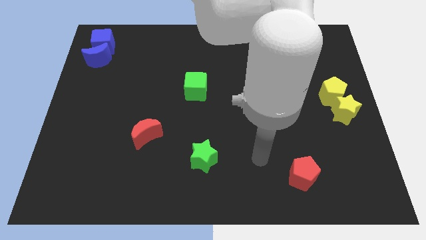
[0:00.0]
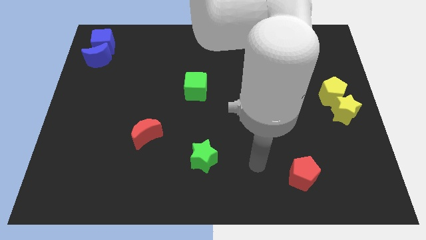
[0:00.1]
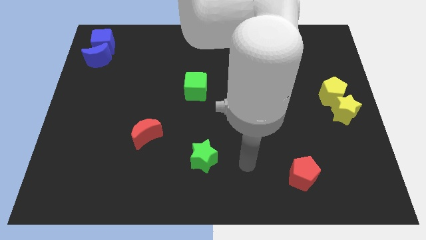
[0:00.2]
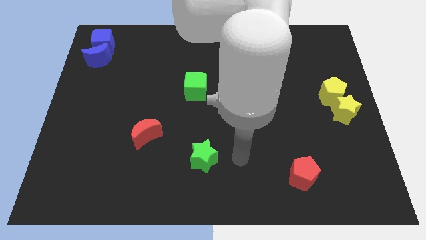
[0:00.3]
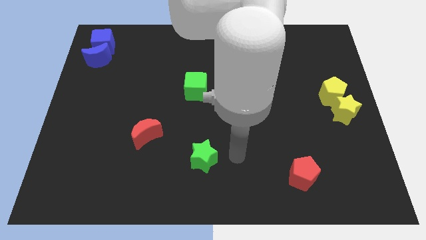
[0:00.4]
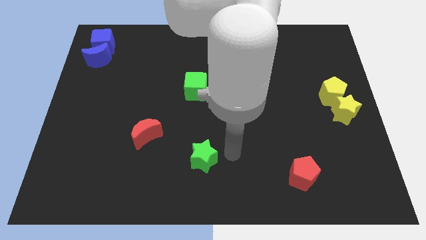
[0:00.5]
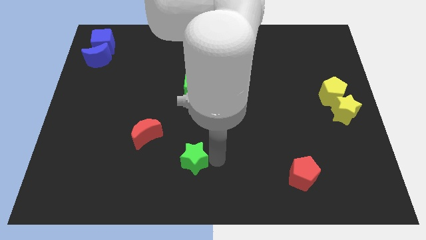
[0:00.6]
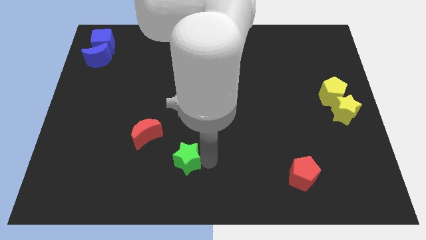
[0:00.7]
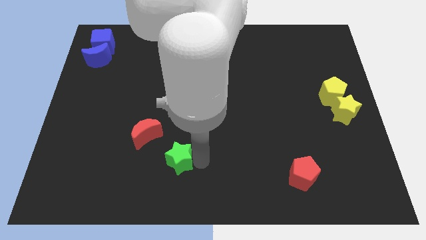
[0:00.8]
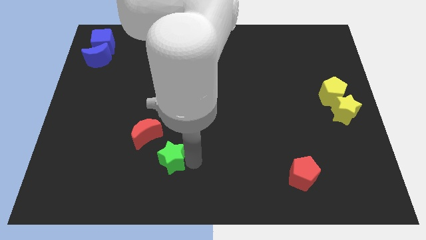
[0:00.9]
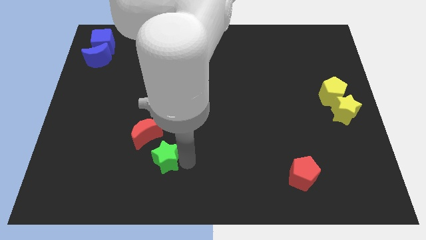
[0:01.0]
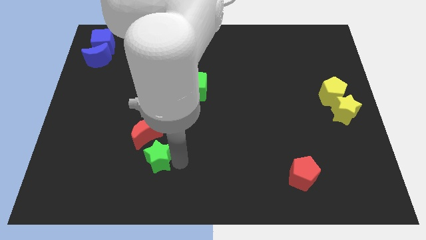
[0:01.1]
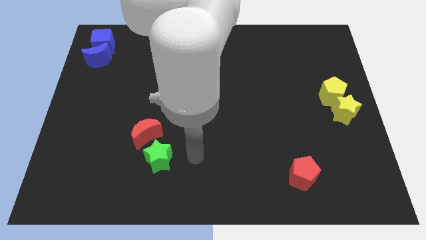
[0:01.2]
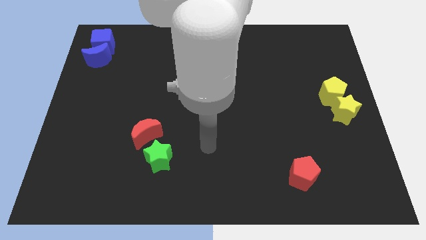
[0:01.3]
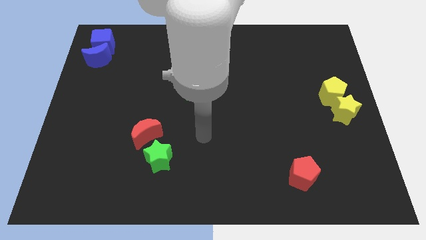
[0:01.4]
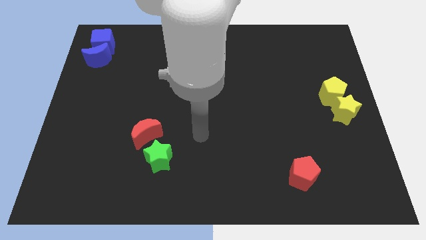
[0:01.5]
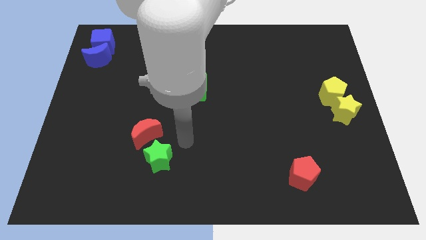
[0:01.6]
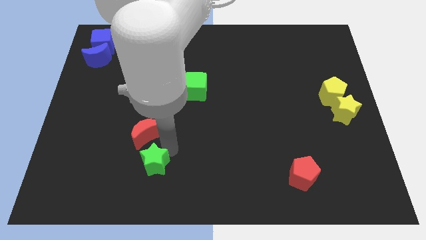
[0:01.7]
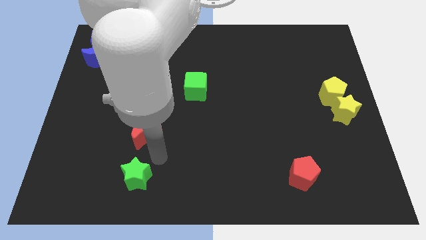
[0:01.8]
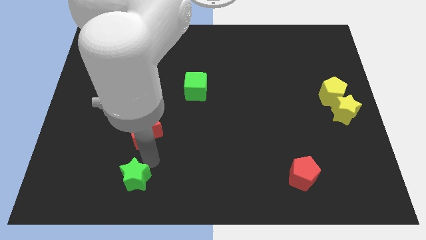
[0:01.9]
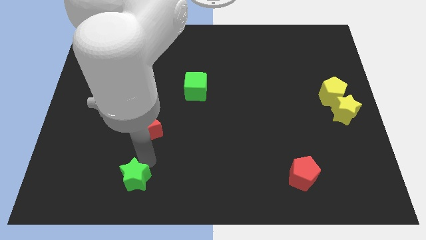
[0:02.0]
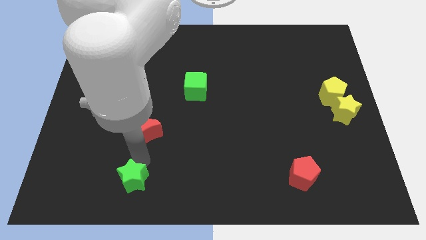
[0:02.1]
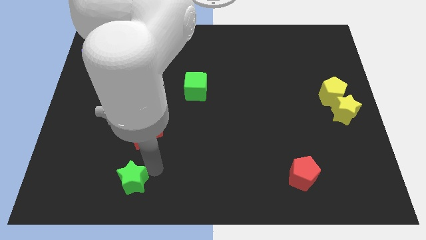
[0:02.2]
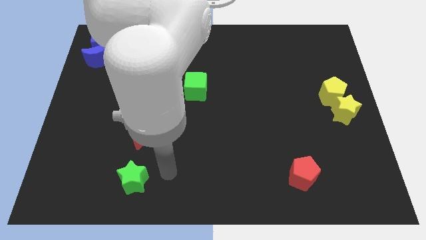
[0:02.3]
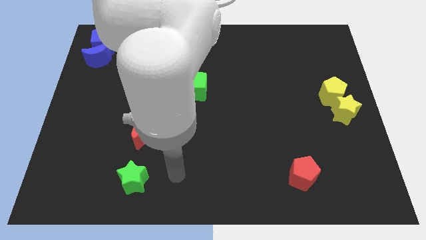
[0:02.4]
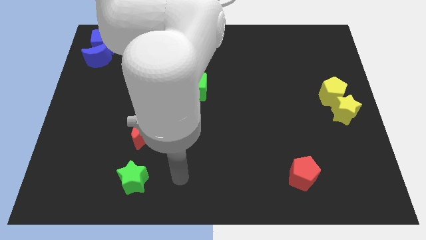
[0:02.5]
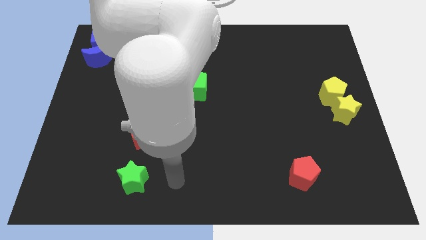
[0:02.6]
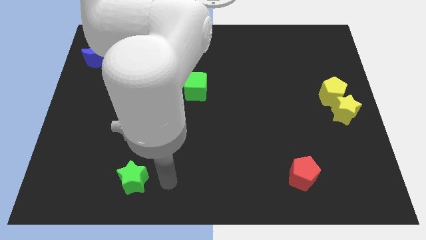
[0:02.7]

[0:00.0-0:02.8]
move the green star to the bottom of the red crescent

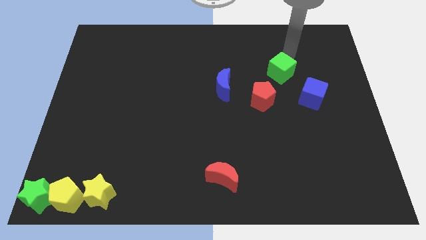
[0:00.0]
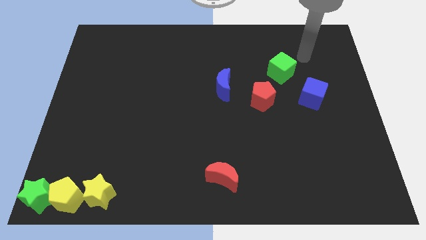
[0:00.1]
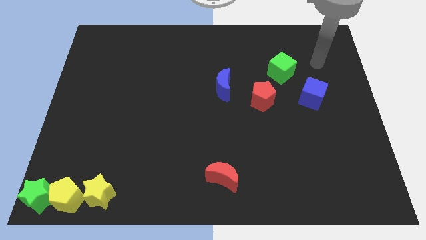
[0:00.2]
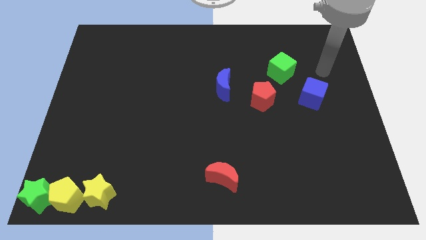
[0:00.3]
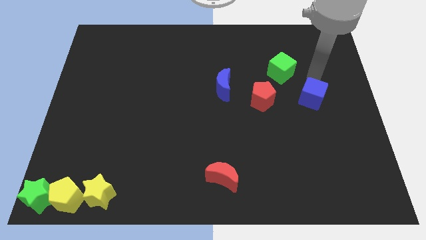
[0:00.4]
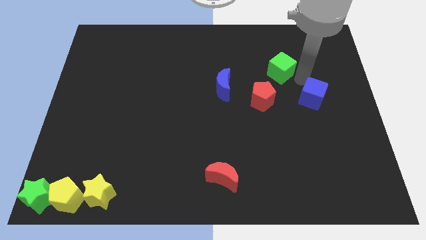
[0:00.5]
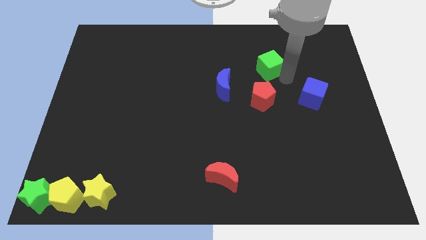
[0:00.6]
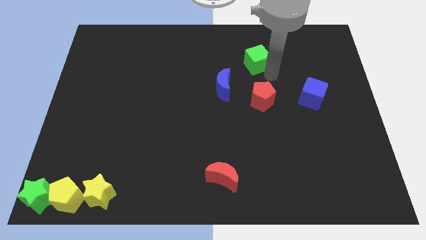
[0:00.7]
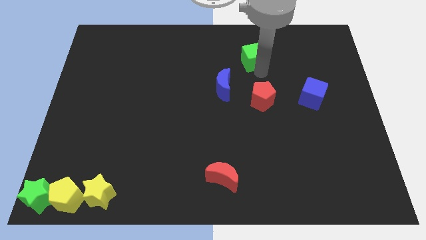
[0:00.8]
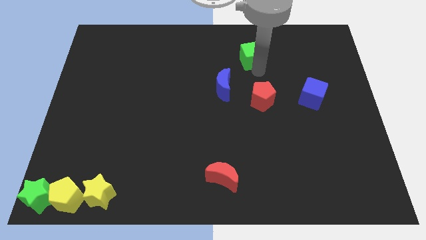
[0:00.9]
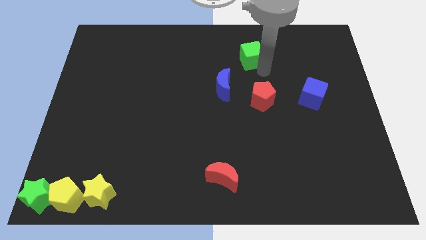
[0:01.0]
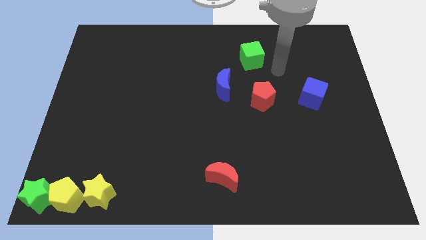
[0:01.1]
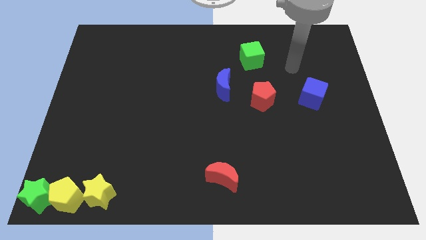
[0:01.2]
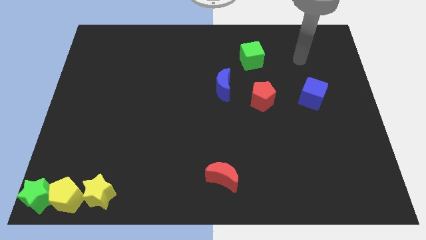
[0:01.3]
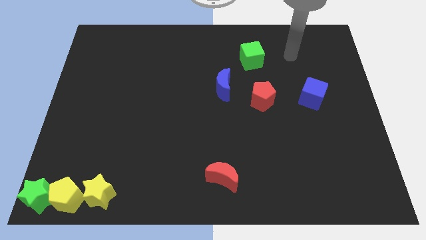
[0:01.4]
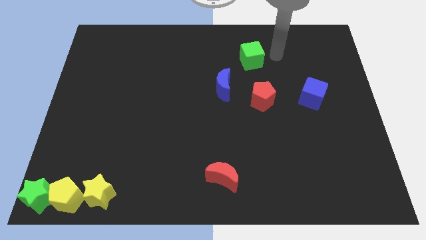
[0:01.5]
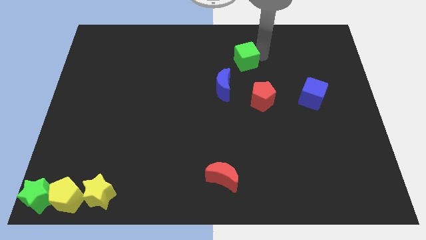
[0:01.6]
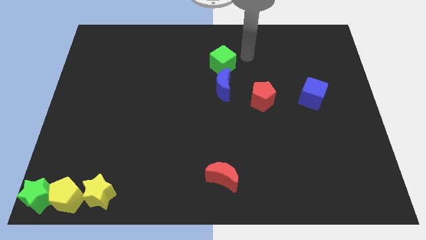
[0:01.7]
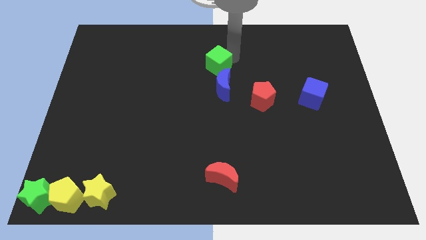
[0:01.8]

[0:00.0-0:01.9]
move the green cube closer to the blue crescent

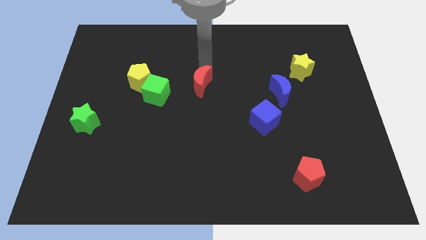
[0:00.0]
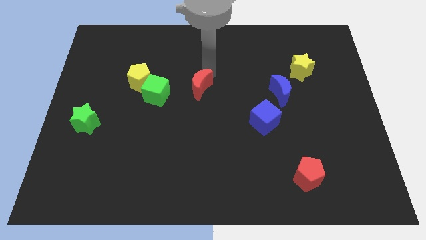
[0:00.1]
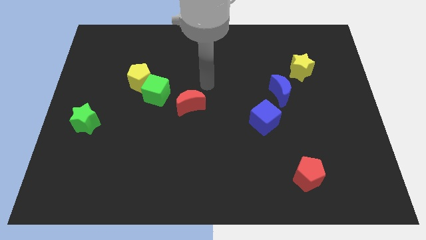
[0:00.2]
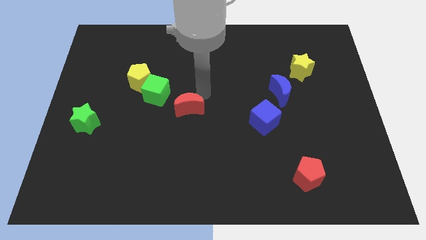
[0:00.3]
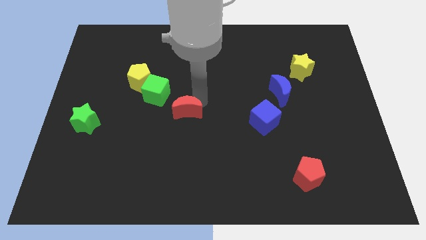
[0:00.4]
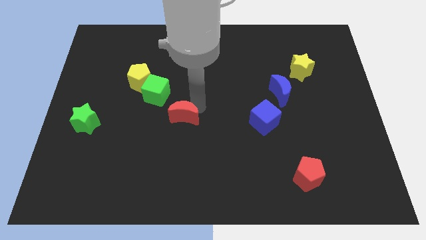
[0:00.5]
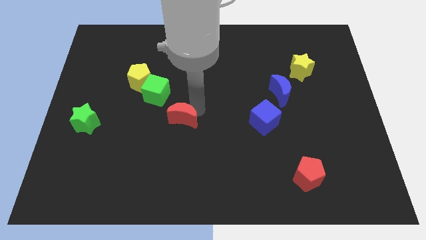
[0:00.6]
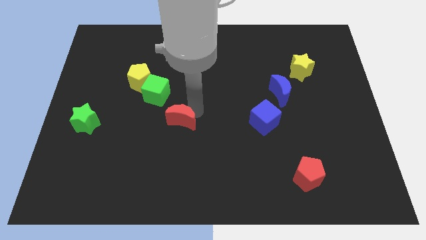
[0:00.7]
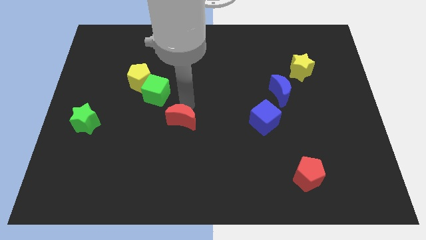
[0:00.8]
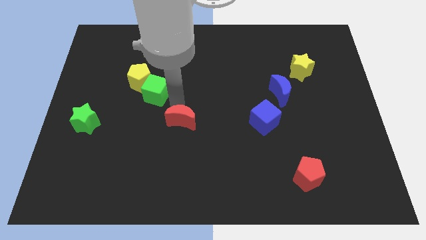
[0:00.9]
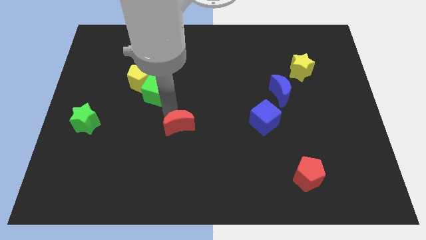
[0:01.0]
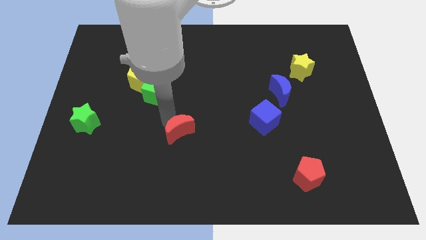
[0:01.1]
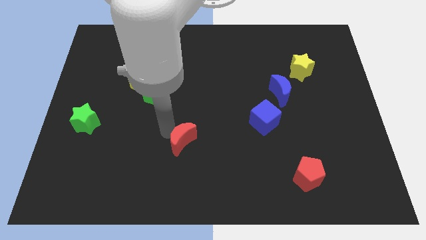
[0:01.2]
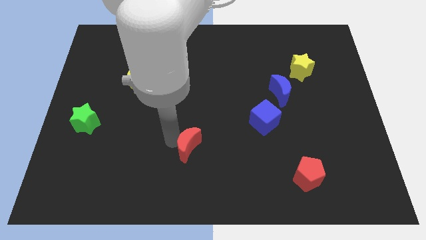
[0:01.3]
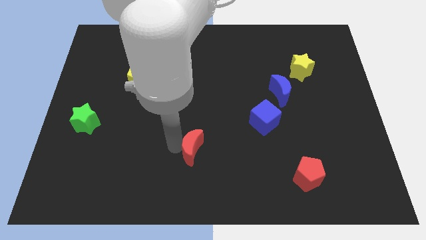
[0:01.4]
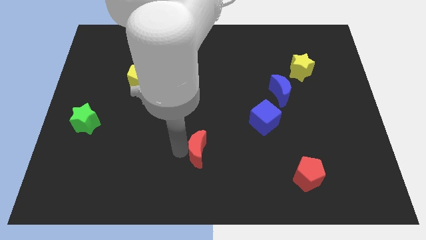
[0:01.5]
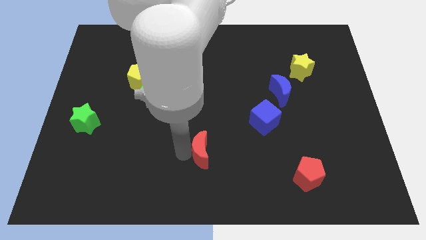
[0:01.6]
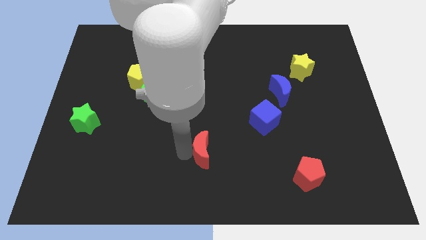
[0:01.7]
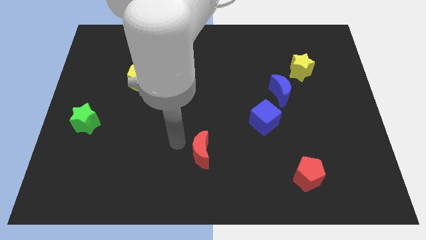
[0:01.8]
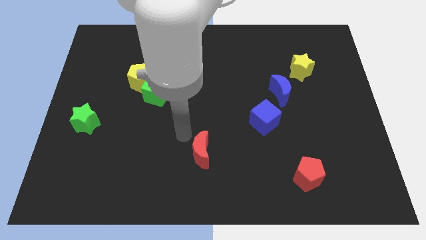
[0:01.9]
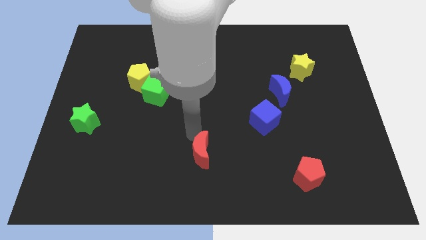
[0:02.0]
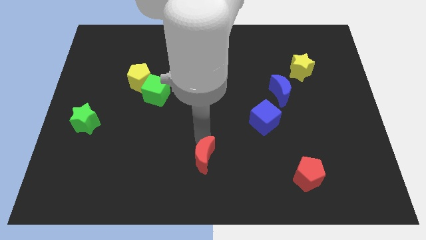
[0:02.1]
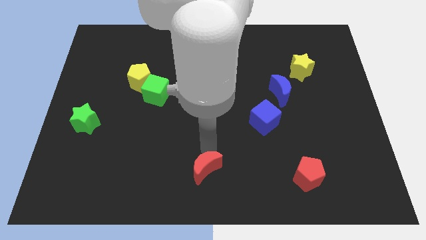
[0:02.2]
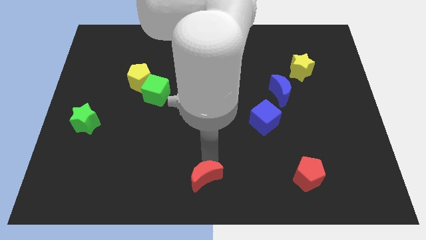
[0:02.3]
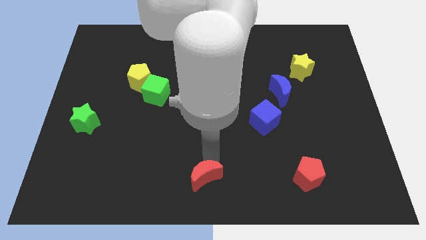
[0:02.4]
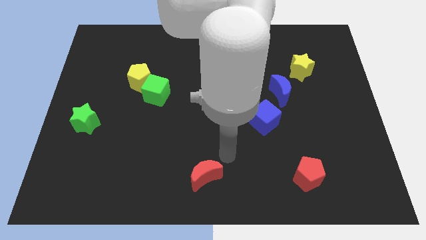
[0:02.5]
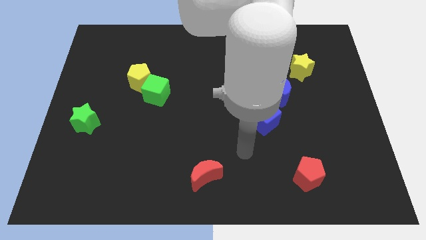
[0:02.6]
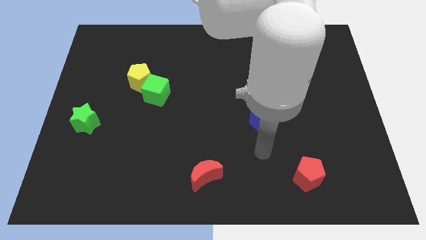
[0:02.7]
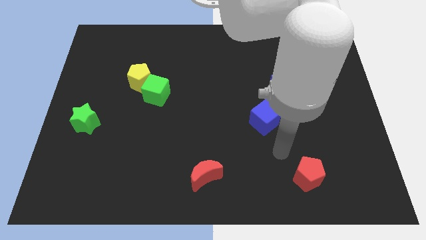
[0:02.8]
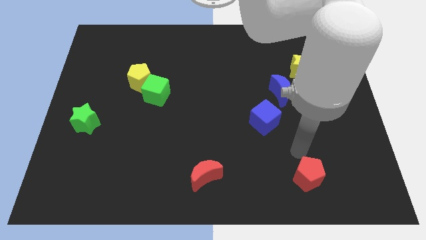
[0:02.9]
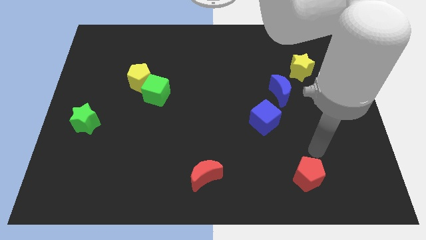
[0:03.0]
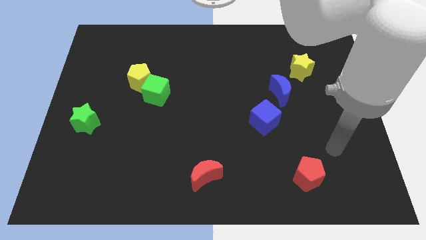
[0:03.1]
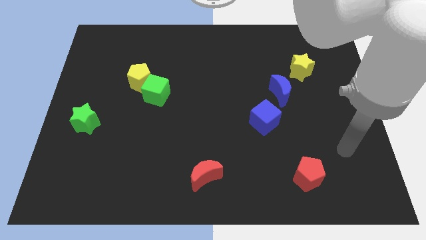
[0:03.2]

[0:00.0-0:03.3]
place the red moon parallel left to red pentagon

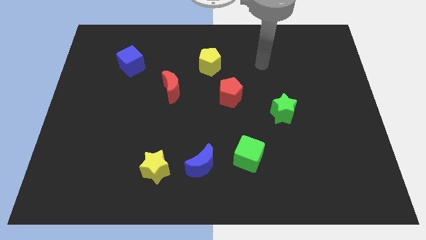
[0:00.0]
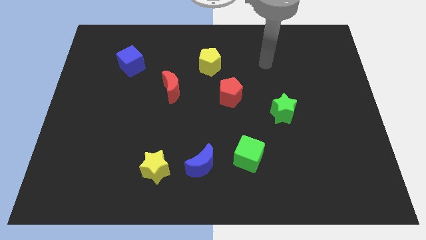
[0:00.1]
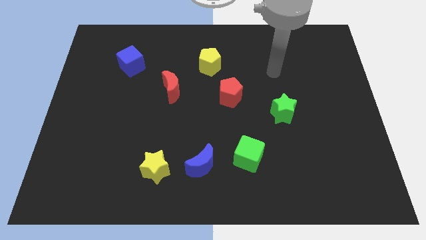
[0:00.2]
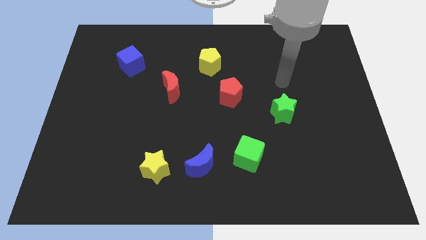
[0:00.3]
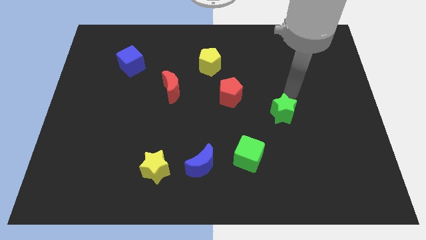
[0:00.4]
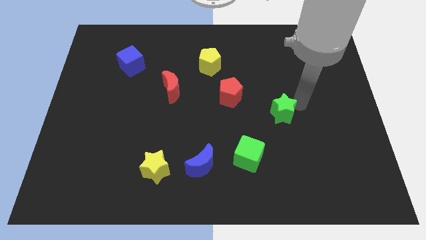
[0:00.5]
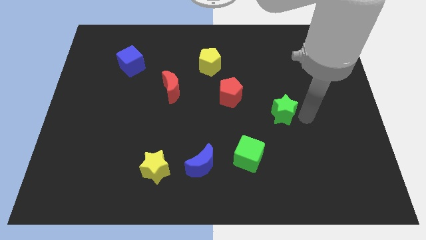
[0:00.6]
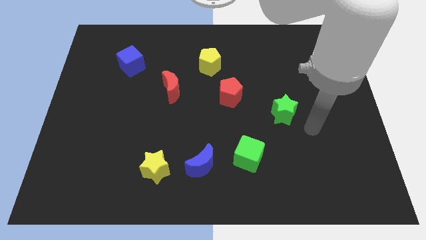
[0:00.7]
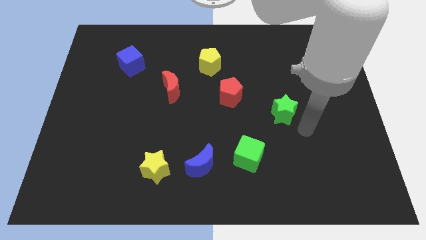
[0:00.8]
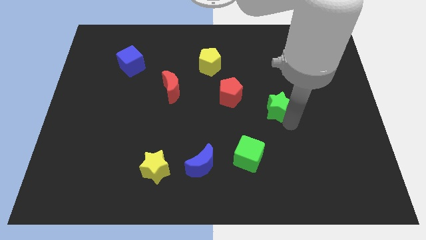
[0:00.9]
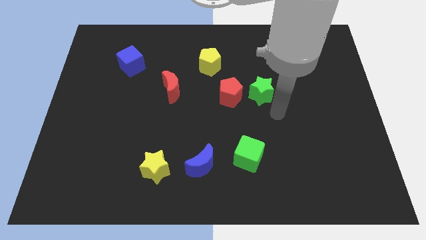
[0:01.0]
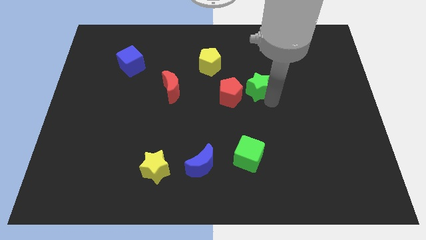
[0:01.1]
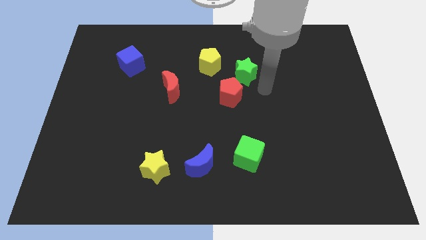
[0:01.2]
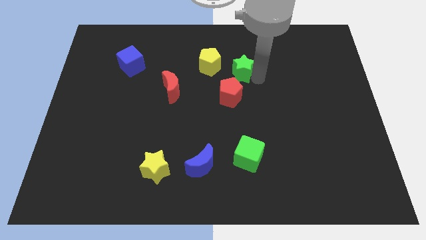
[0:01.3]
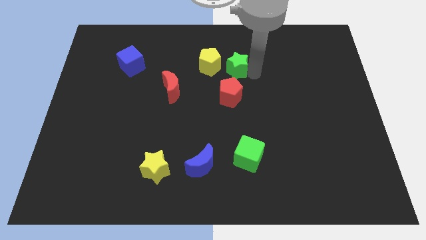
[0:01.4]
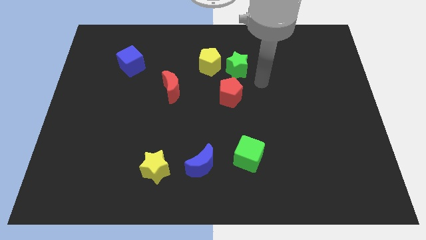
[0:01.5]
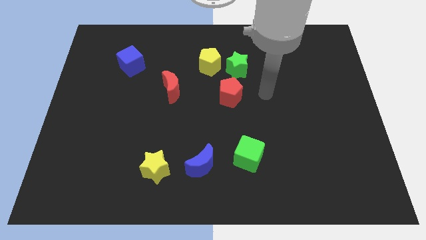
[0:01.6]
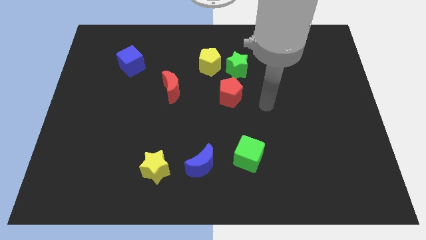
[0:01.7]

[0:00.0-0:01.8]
put the green star to the right side of the yellow pentagon
